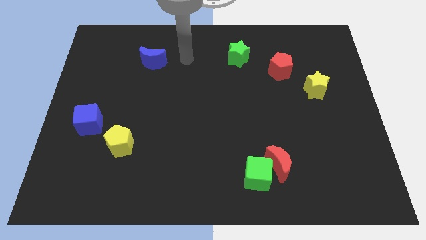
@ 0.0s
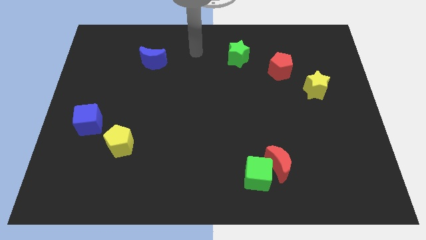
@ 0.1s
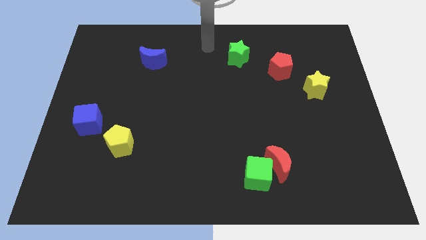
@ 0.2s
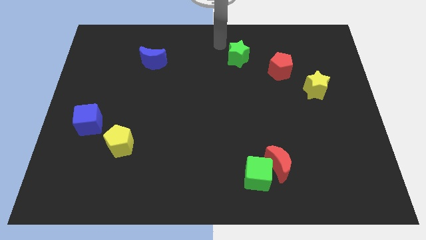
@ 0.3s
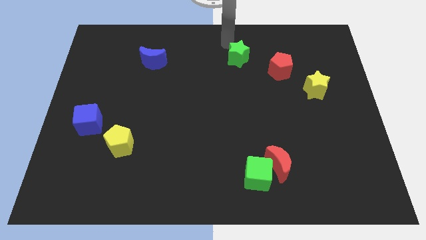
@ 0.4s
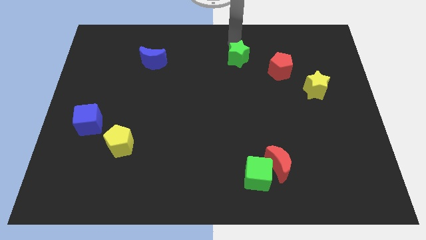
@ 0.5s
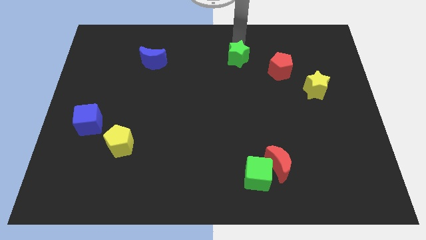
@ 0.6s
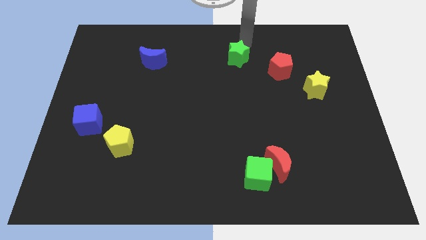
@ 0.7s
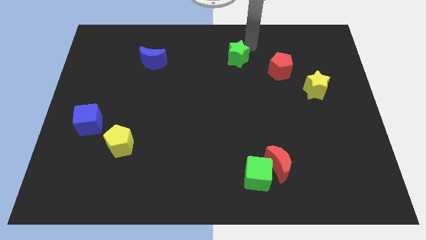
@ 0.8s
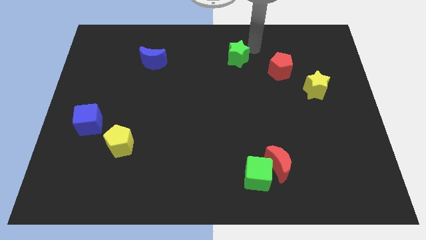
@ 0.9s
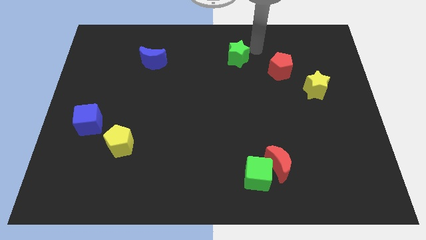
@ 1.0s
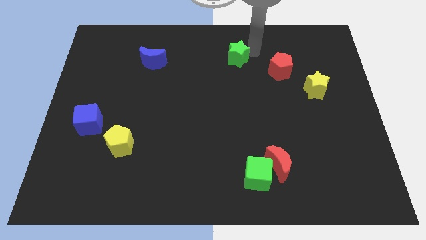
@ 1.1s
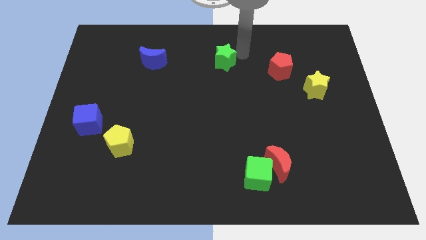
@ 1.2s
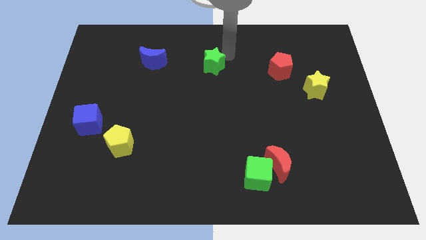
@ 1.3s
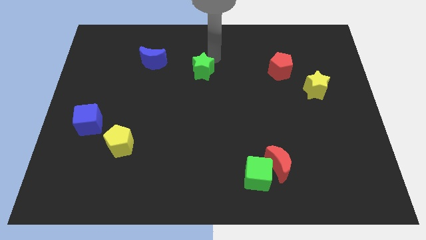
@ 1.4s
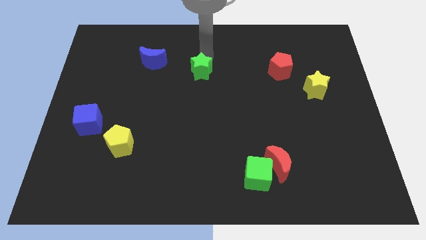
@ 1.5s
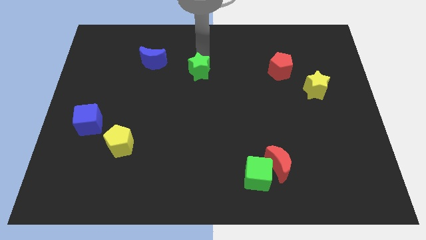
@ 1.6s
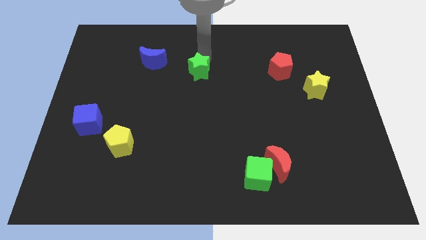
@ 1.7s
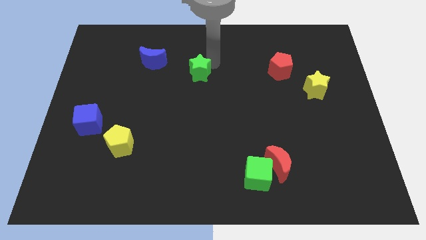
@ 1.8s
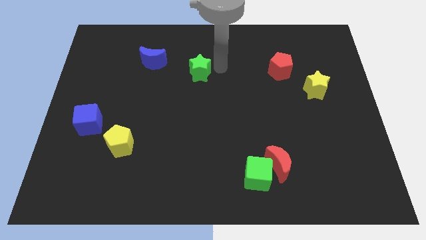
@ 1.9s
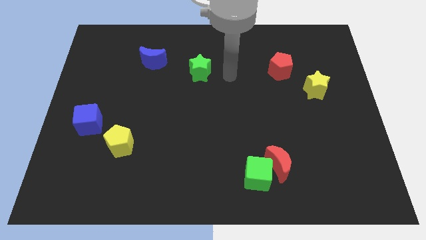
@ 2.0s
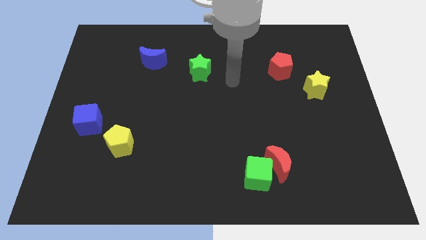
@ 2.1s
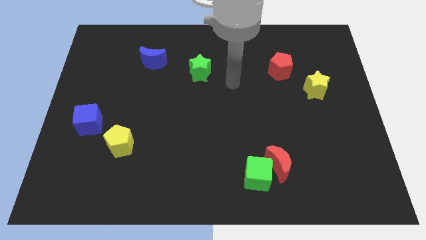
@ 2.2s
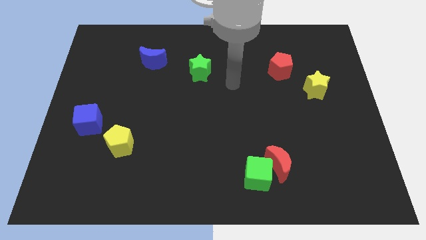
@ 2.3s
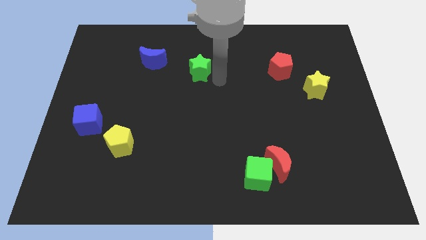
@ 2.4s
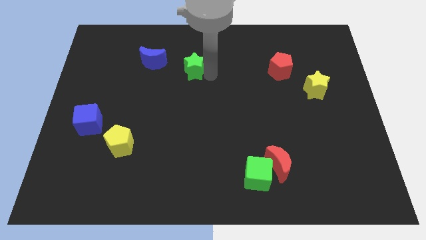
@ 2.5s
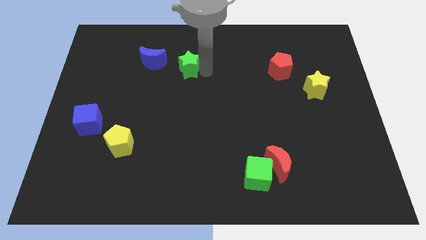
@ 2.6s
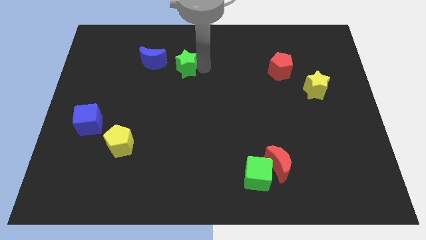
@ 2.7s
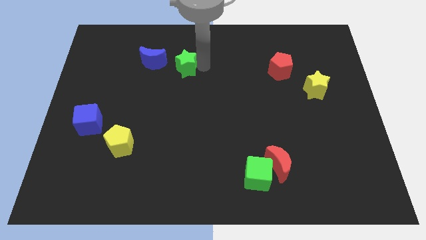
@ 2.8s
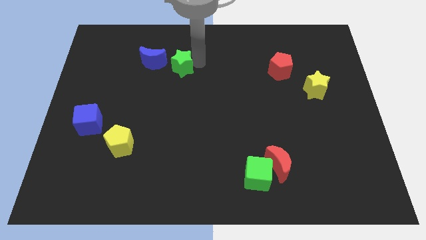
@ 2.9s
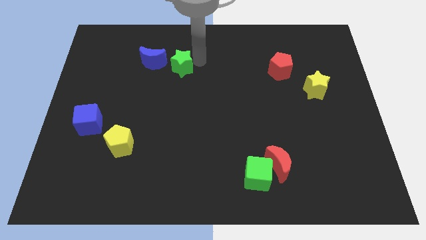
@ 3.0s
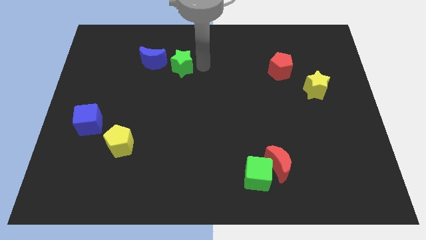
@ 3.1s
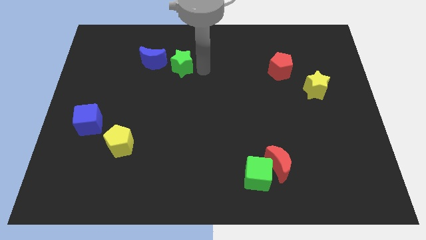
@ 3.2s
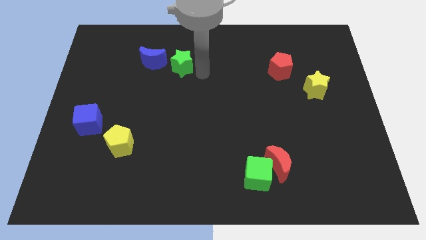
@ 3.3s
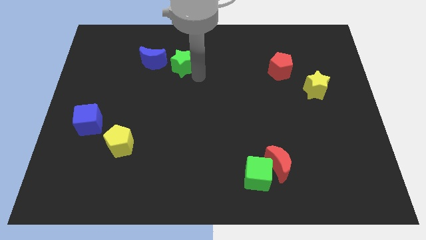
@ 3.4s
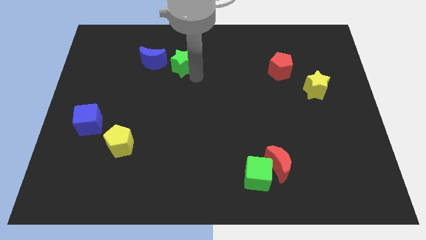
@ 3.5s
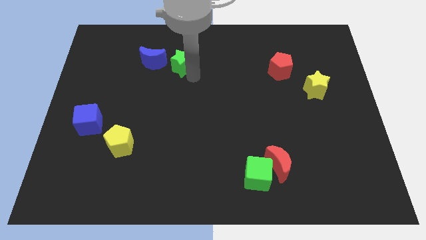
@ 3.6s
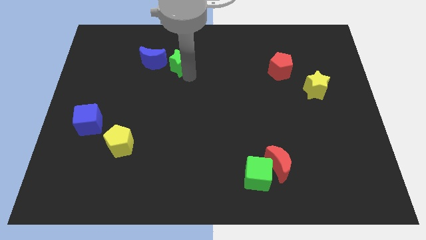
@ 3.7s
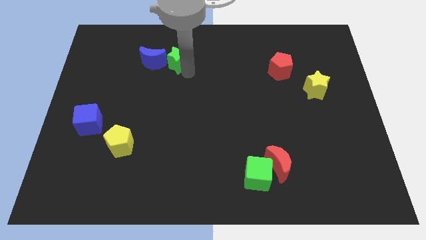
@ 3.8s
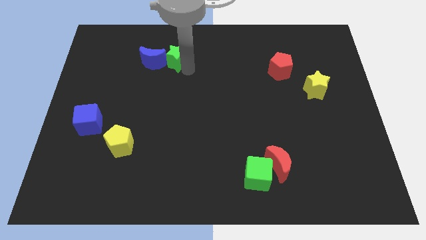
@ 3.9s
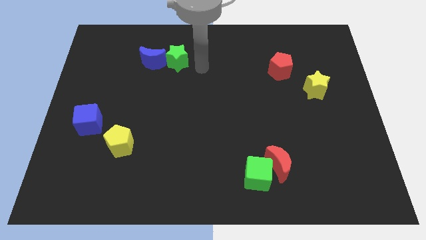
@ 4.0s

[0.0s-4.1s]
push the green star to the right of the blue crescent

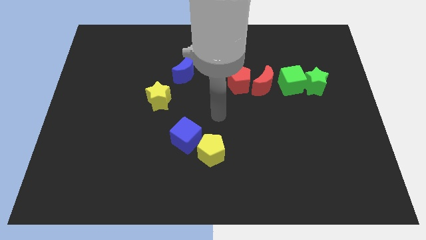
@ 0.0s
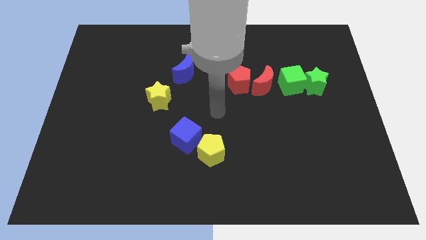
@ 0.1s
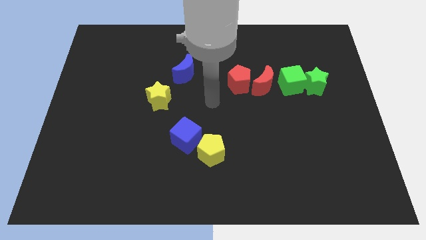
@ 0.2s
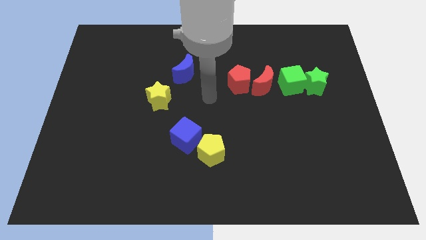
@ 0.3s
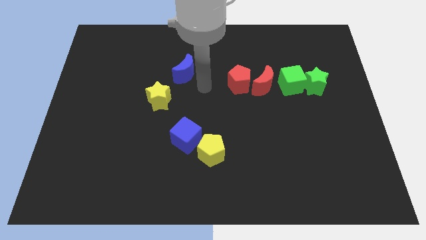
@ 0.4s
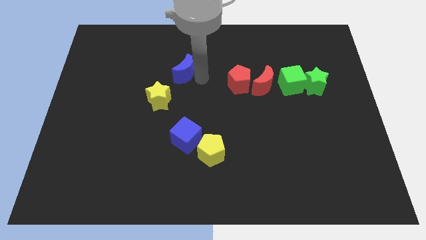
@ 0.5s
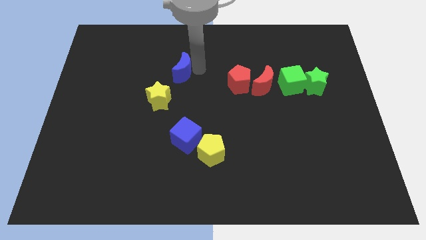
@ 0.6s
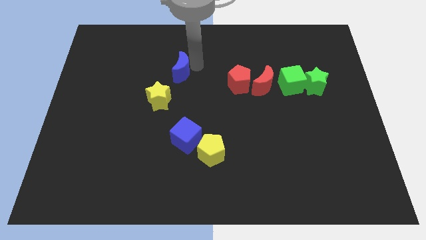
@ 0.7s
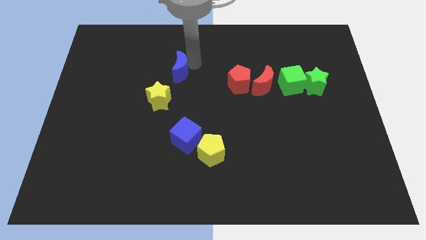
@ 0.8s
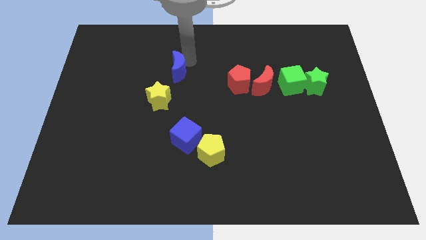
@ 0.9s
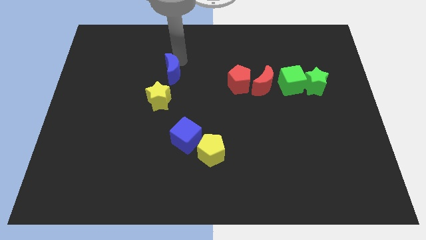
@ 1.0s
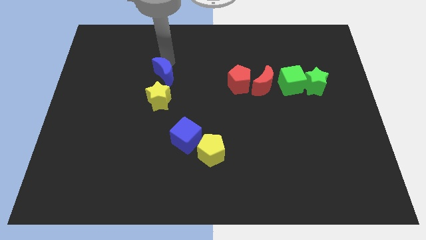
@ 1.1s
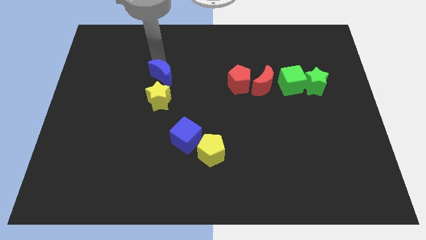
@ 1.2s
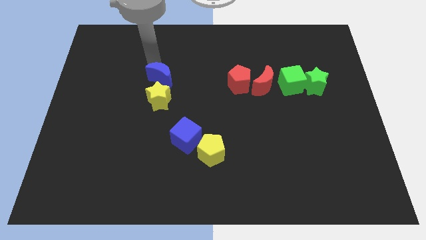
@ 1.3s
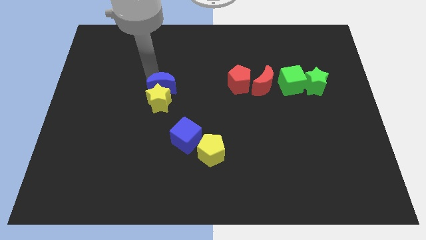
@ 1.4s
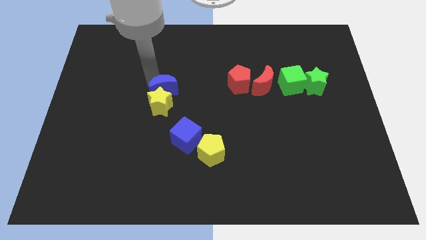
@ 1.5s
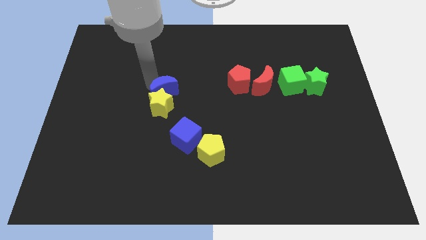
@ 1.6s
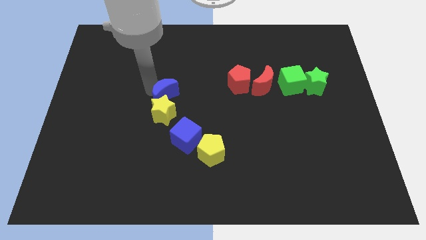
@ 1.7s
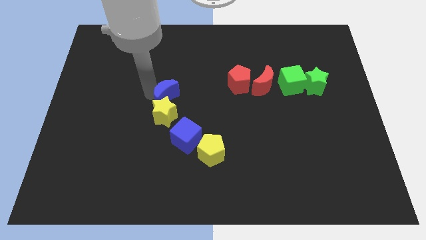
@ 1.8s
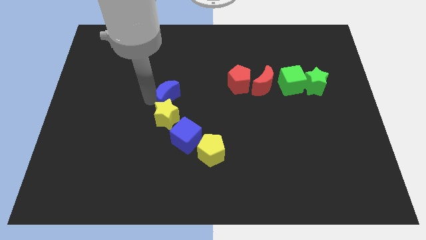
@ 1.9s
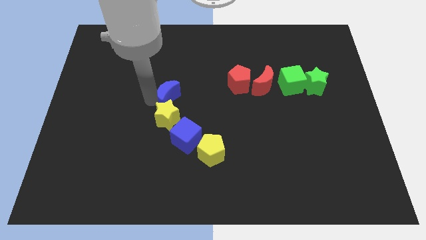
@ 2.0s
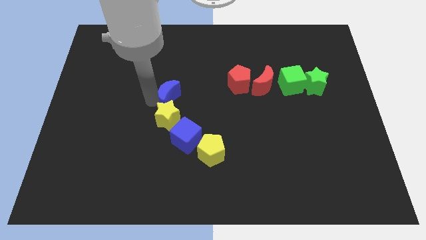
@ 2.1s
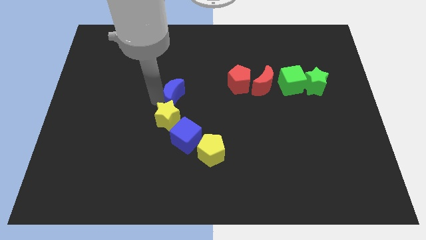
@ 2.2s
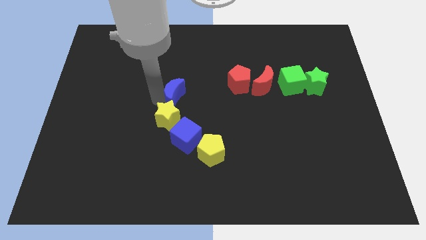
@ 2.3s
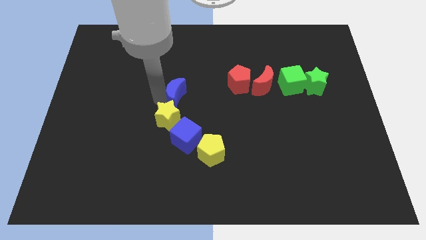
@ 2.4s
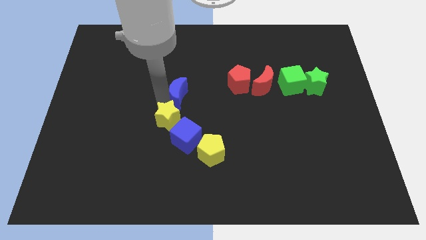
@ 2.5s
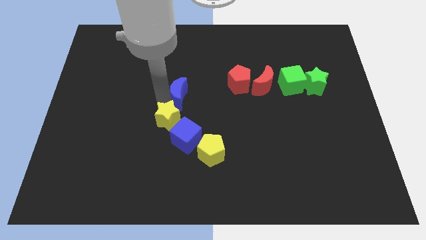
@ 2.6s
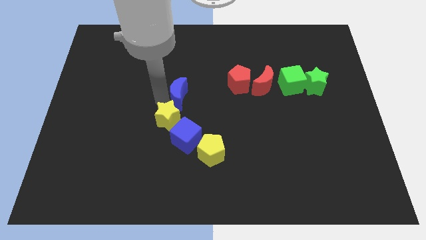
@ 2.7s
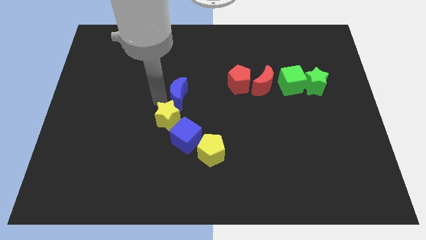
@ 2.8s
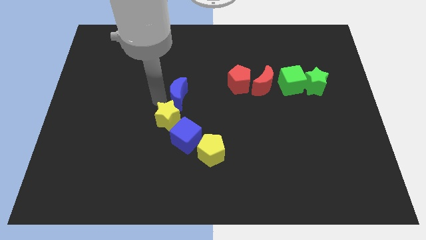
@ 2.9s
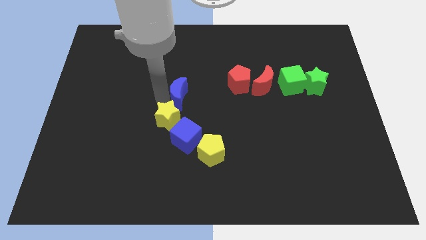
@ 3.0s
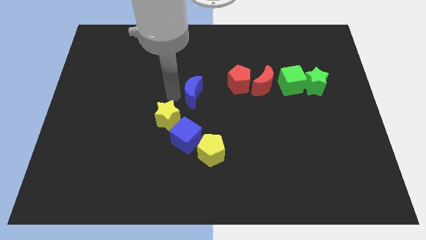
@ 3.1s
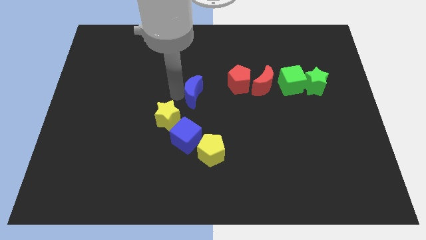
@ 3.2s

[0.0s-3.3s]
move blue crescent to the left of red pentagon

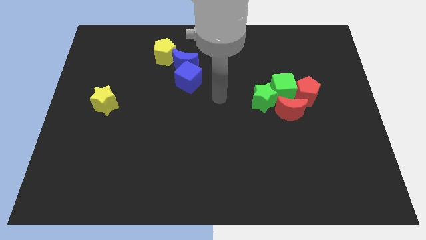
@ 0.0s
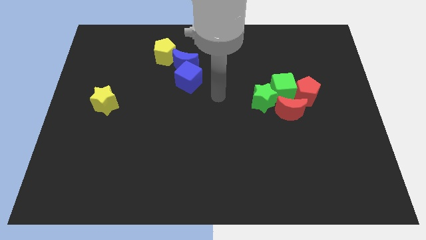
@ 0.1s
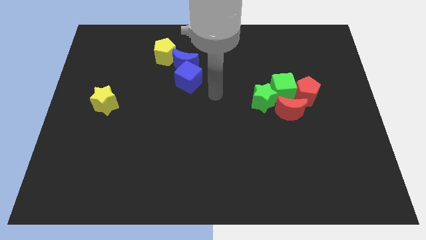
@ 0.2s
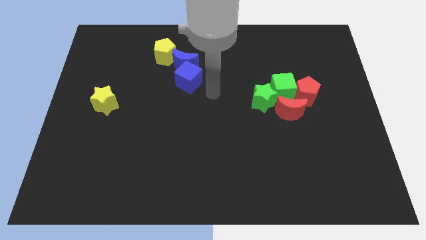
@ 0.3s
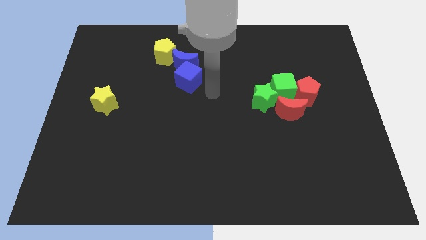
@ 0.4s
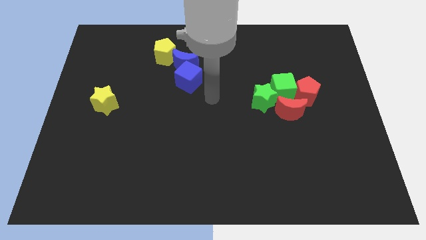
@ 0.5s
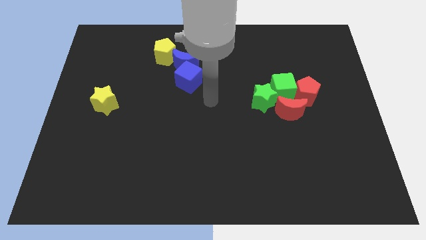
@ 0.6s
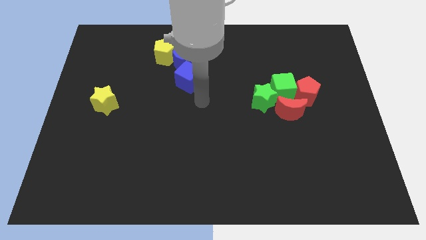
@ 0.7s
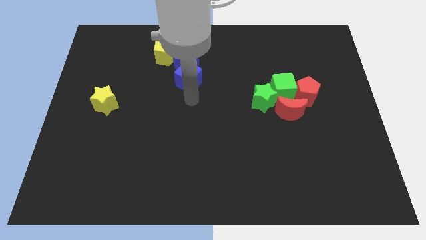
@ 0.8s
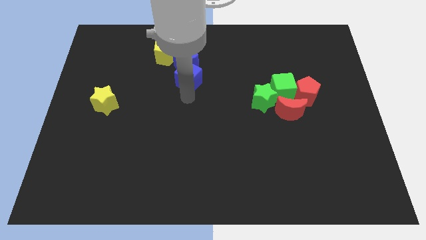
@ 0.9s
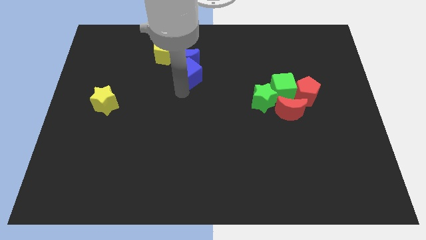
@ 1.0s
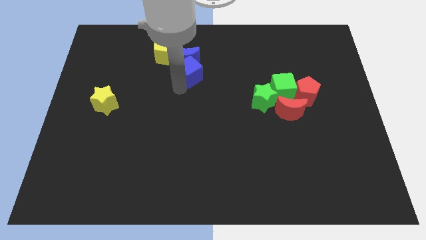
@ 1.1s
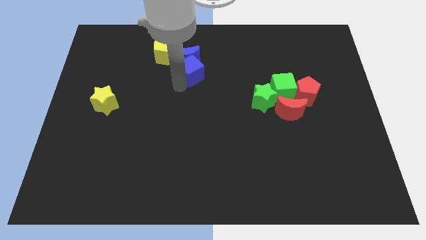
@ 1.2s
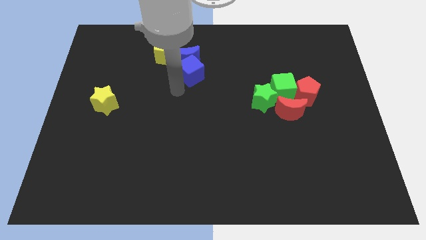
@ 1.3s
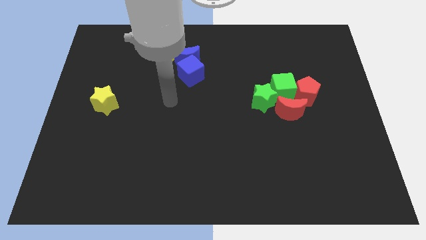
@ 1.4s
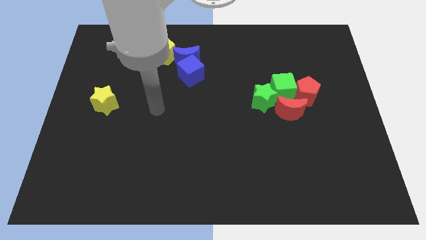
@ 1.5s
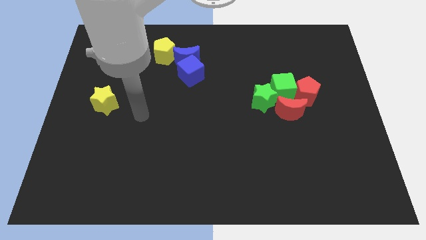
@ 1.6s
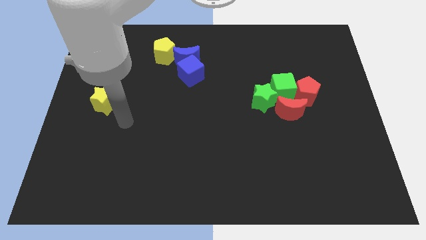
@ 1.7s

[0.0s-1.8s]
push the blue cube into the blue crescent
